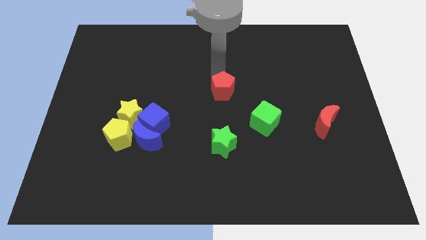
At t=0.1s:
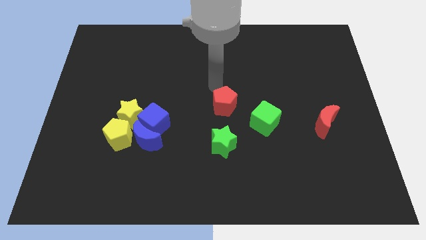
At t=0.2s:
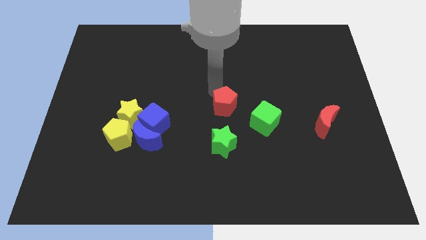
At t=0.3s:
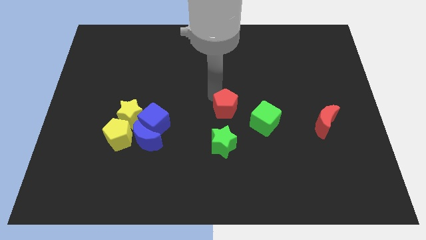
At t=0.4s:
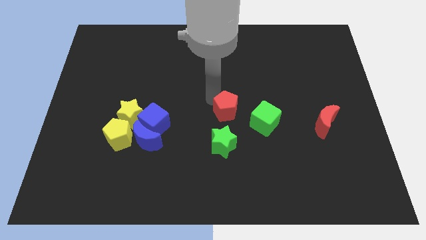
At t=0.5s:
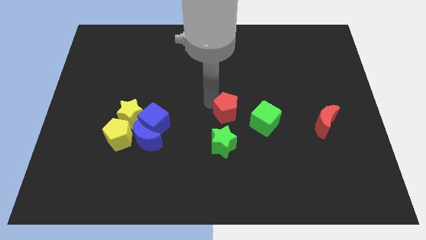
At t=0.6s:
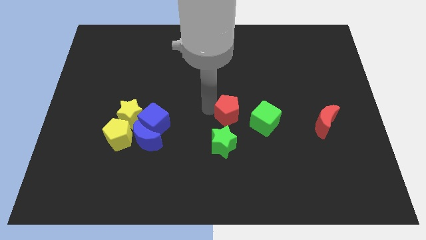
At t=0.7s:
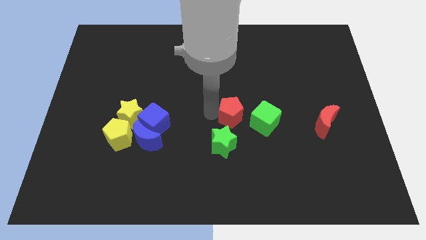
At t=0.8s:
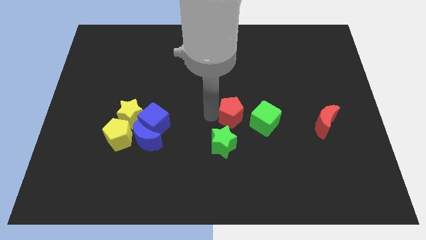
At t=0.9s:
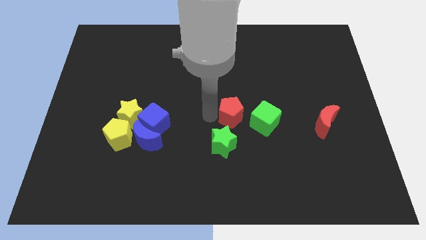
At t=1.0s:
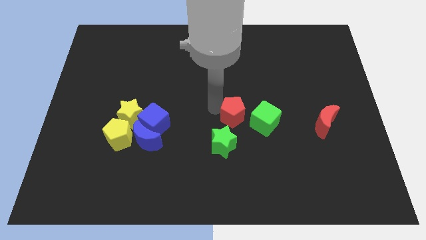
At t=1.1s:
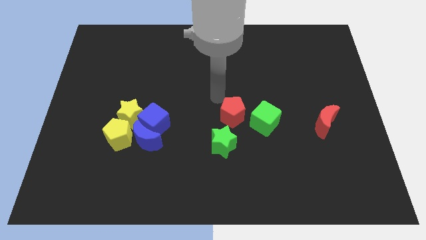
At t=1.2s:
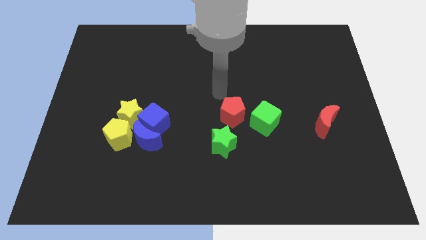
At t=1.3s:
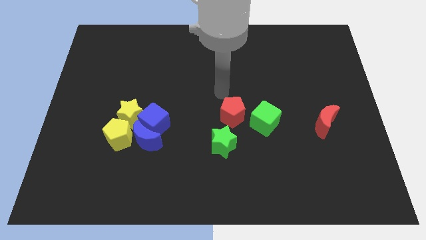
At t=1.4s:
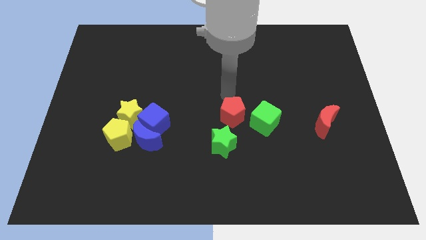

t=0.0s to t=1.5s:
place red pentagon close to the green star

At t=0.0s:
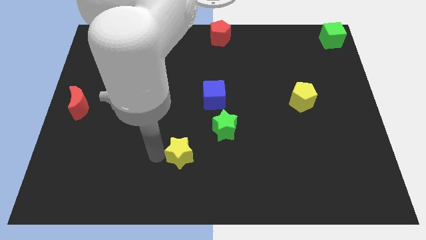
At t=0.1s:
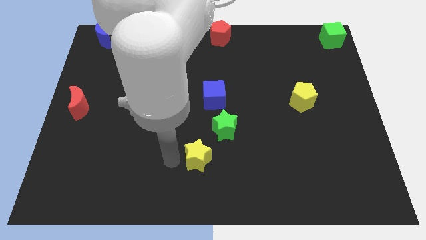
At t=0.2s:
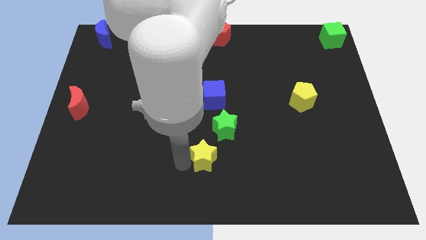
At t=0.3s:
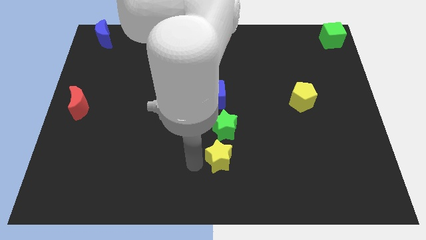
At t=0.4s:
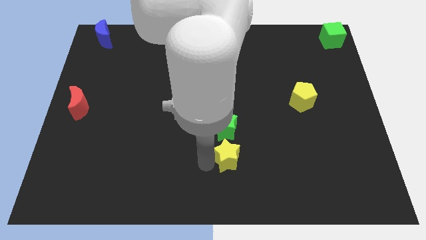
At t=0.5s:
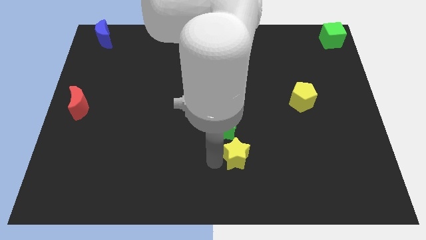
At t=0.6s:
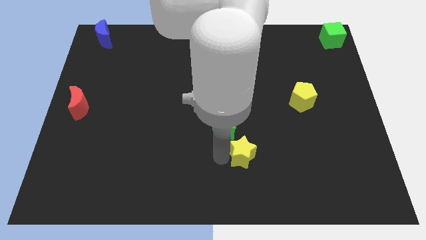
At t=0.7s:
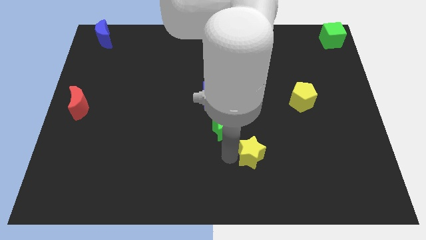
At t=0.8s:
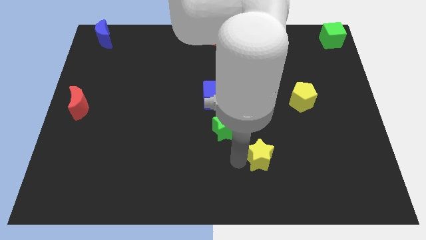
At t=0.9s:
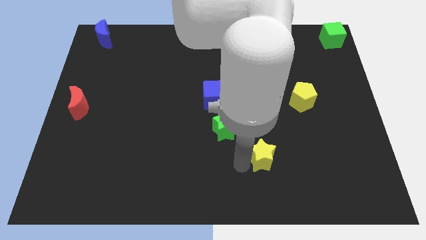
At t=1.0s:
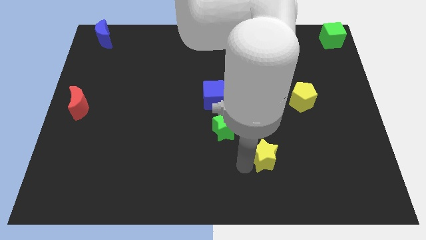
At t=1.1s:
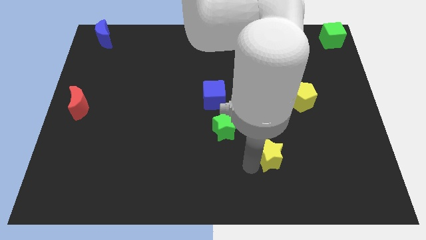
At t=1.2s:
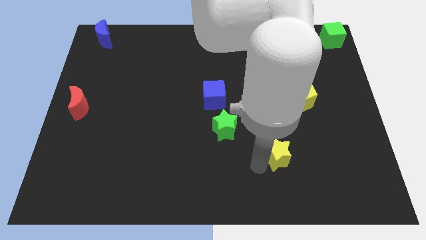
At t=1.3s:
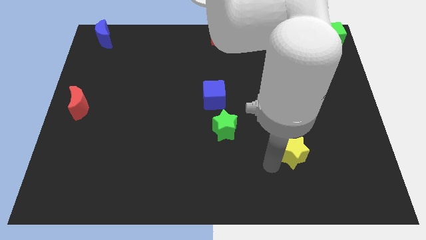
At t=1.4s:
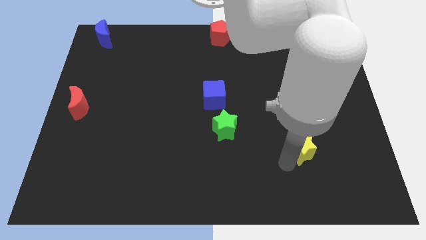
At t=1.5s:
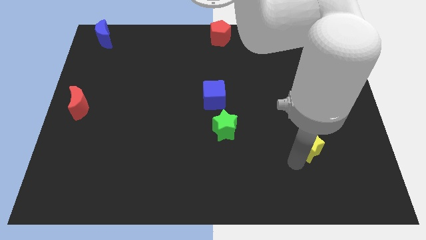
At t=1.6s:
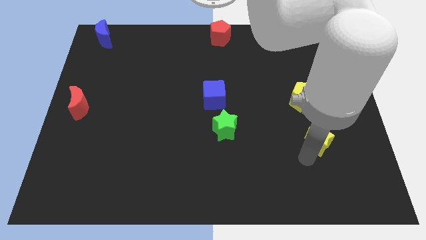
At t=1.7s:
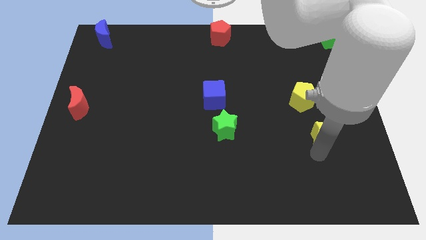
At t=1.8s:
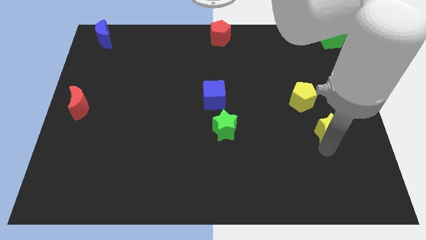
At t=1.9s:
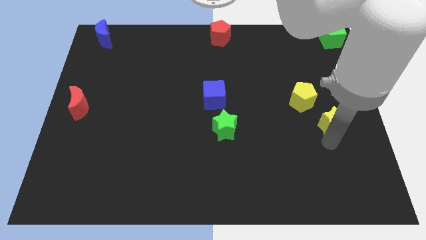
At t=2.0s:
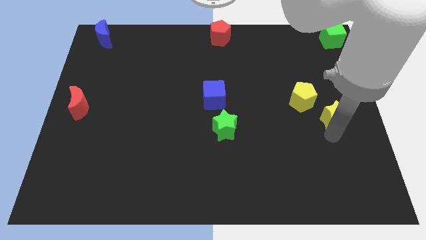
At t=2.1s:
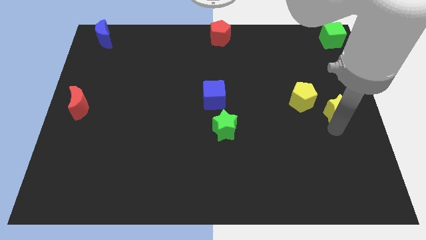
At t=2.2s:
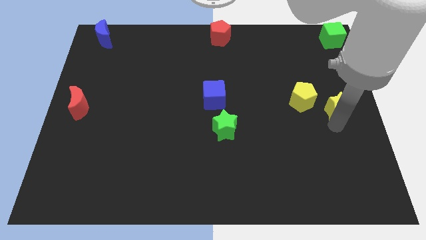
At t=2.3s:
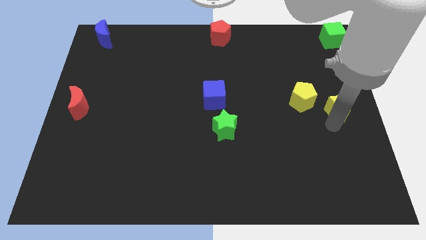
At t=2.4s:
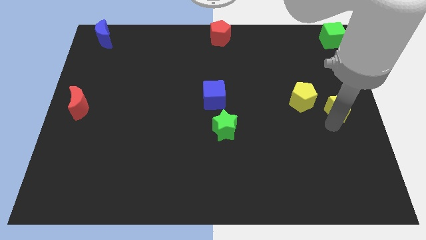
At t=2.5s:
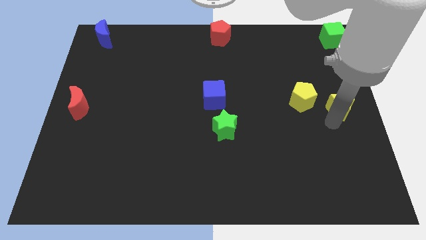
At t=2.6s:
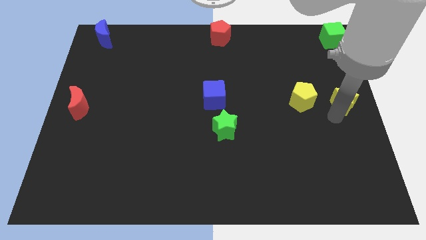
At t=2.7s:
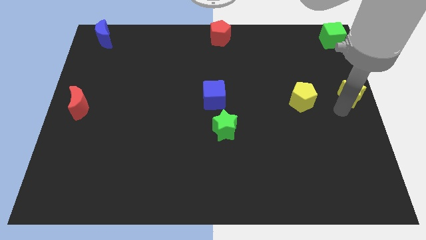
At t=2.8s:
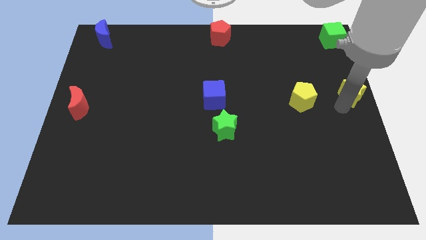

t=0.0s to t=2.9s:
move the yellow star right to the yellow pentagon

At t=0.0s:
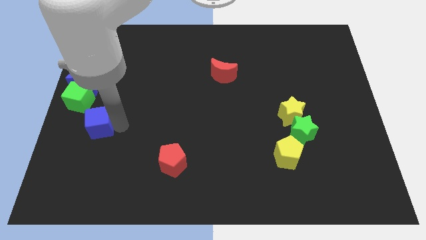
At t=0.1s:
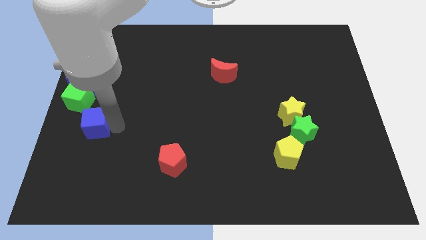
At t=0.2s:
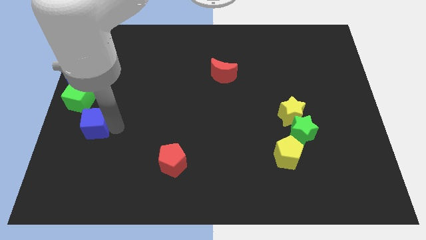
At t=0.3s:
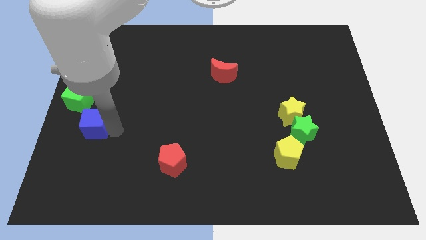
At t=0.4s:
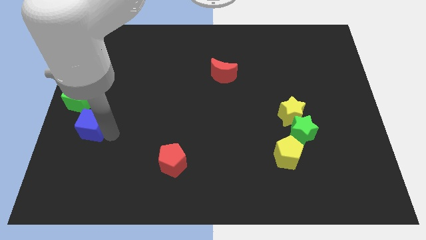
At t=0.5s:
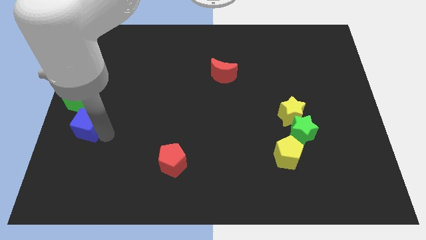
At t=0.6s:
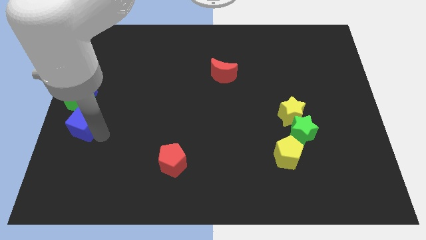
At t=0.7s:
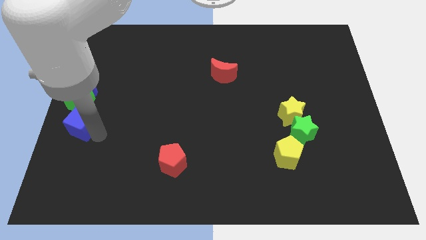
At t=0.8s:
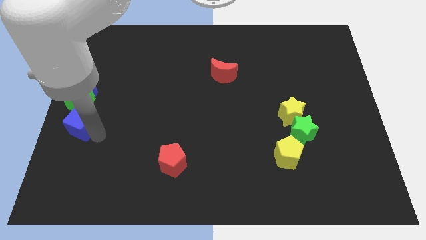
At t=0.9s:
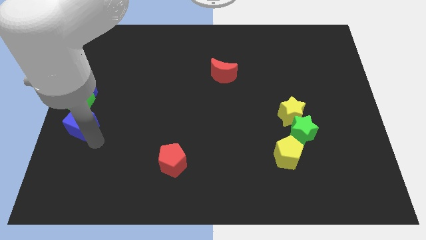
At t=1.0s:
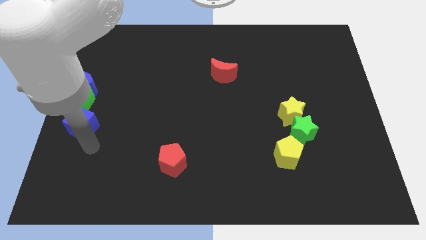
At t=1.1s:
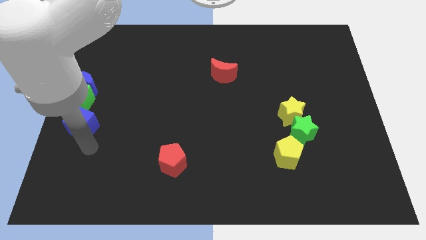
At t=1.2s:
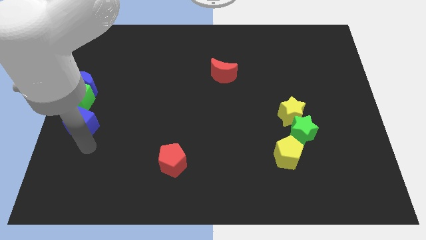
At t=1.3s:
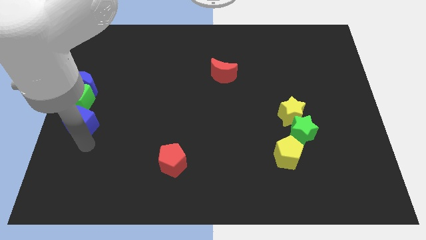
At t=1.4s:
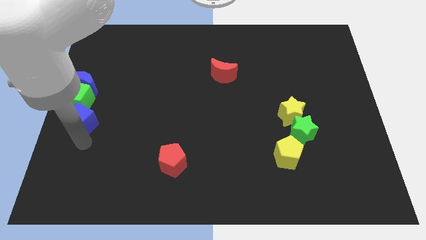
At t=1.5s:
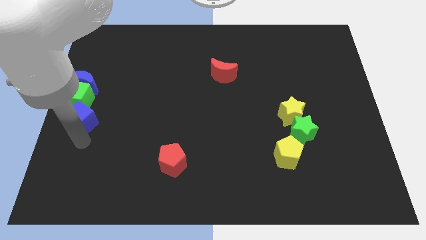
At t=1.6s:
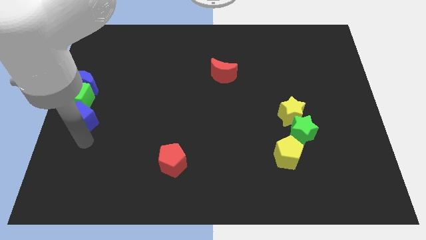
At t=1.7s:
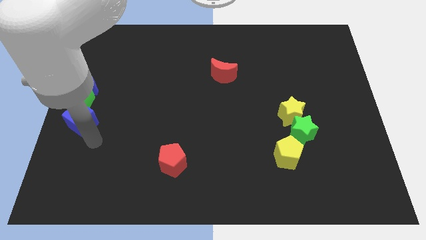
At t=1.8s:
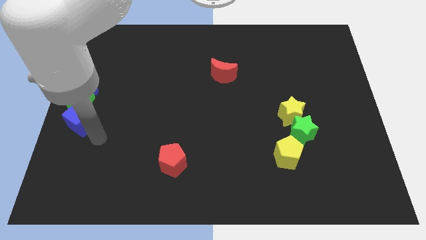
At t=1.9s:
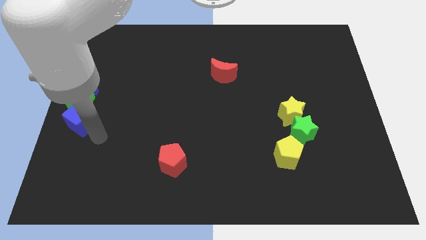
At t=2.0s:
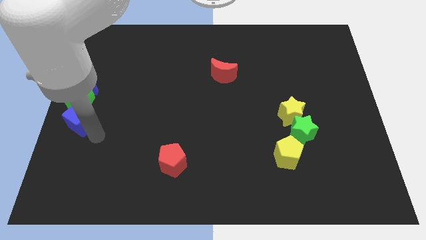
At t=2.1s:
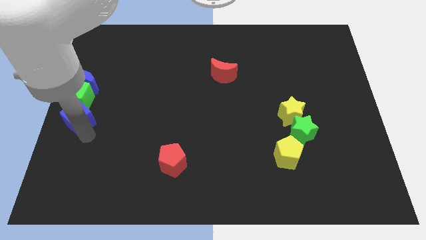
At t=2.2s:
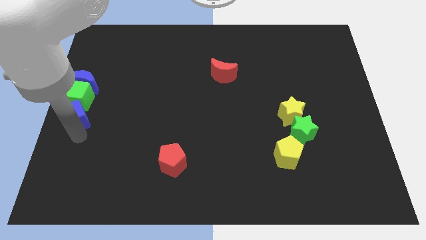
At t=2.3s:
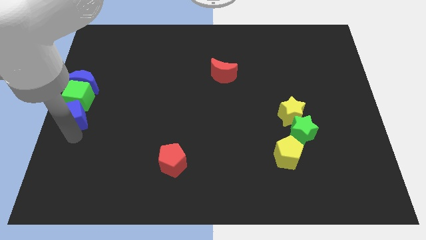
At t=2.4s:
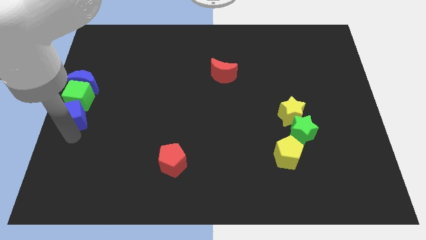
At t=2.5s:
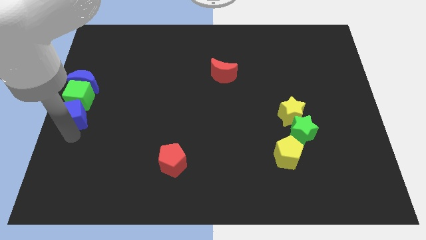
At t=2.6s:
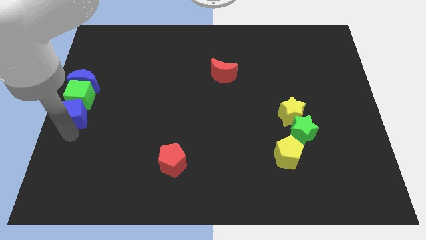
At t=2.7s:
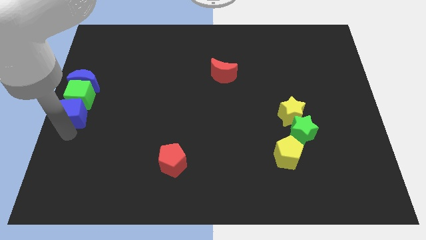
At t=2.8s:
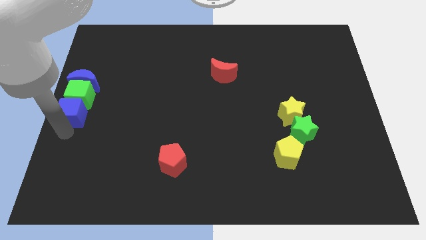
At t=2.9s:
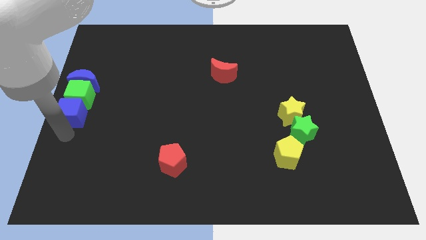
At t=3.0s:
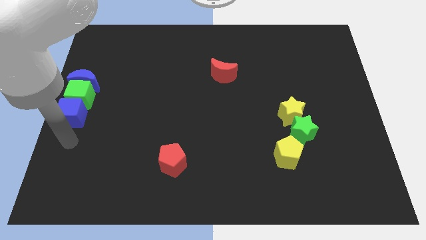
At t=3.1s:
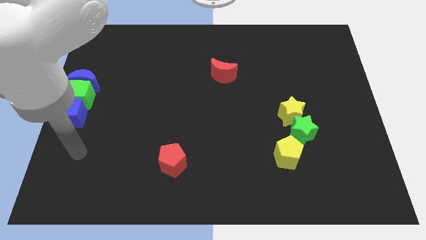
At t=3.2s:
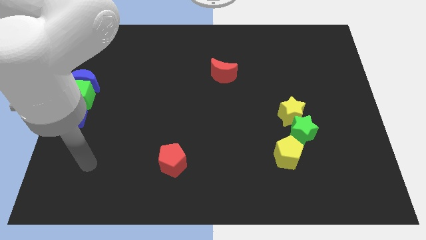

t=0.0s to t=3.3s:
place blue cube below the green cube

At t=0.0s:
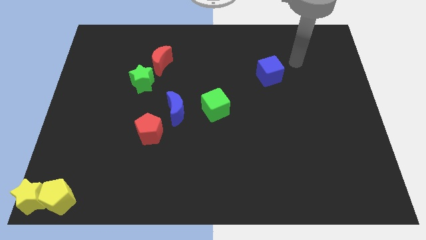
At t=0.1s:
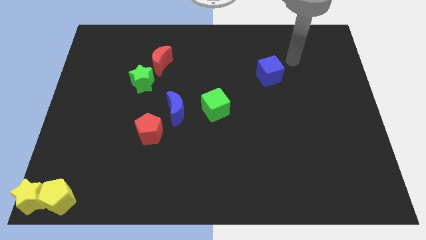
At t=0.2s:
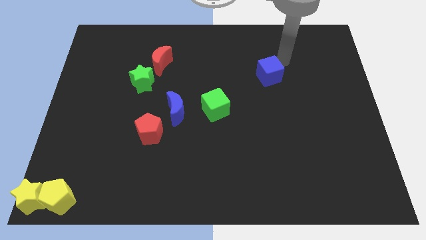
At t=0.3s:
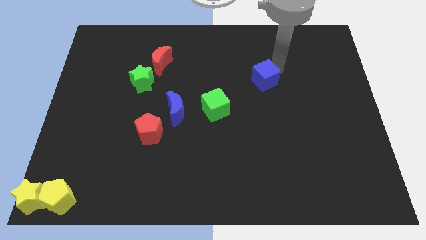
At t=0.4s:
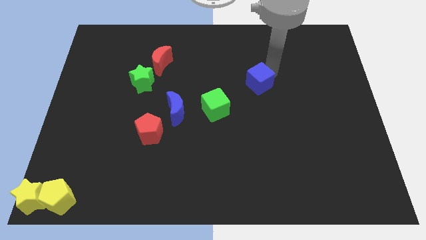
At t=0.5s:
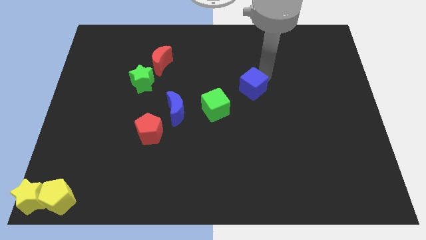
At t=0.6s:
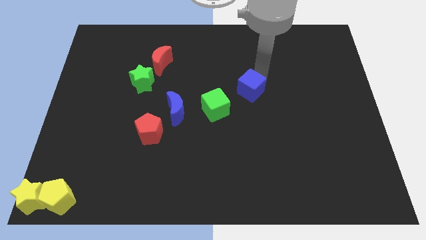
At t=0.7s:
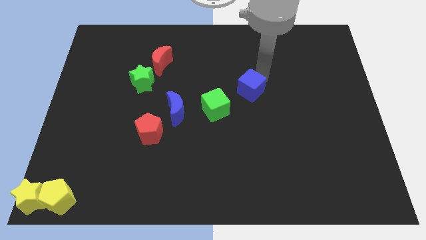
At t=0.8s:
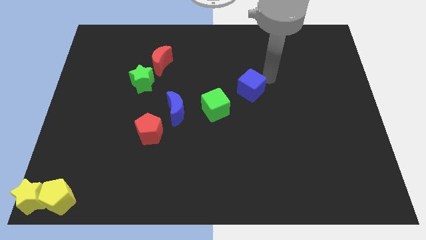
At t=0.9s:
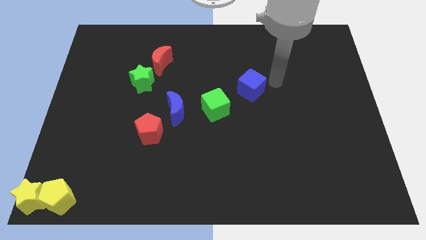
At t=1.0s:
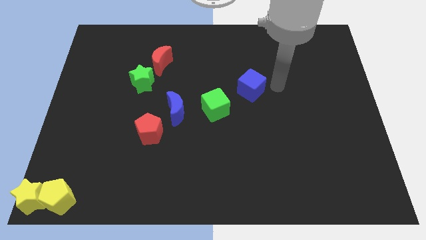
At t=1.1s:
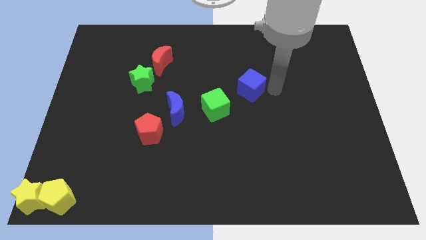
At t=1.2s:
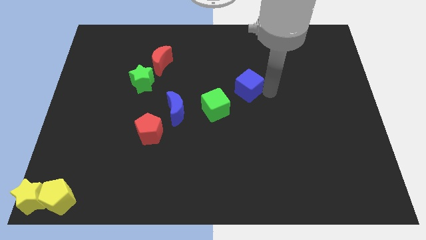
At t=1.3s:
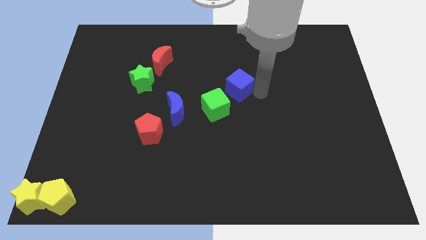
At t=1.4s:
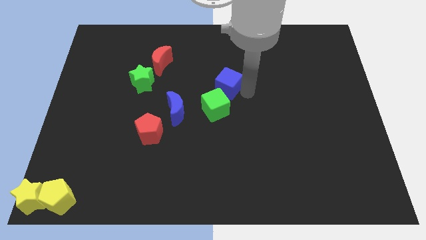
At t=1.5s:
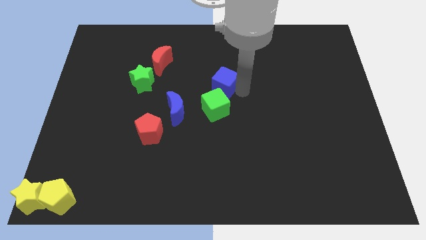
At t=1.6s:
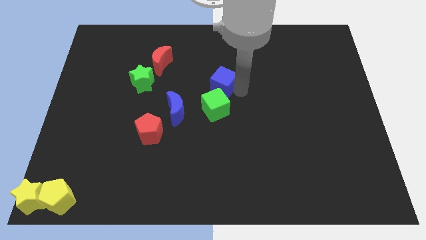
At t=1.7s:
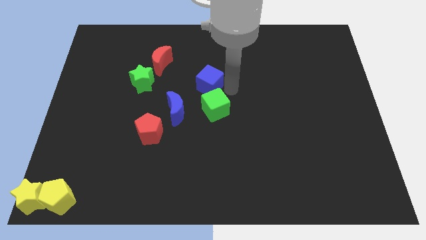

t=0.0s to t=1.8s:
put the blue cube vertically above the green cube
